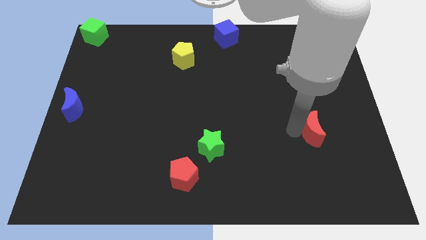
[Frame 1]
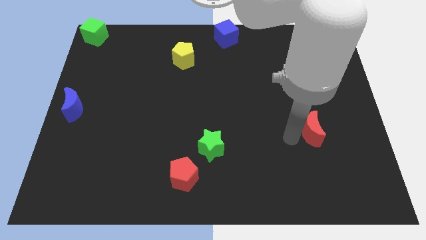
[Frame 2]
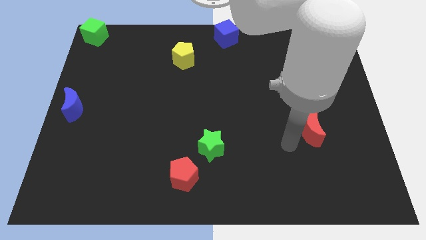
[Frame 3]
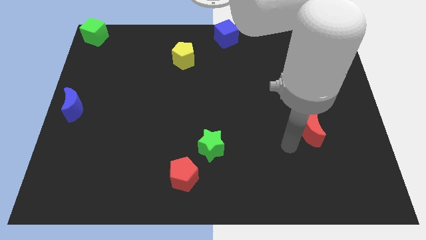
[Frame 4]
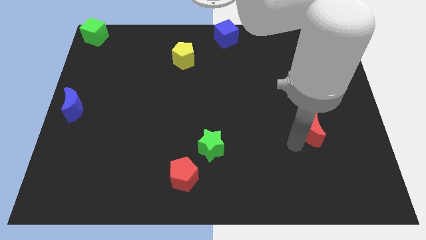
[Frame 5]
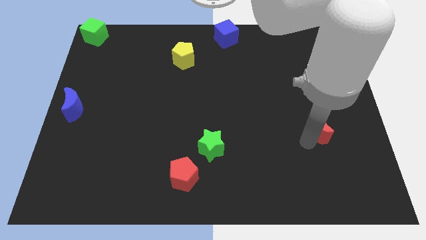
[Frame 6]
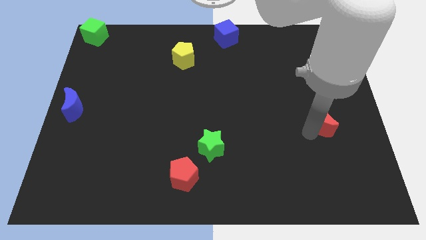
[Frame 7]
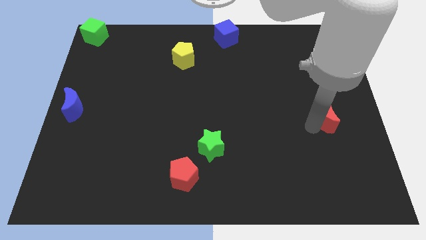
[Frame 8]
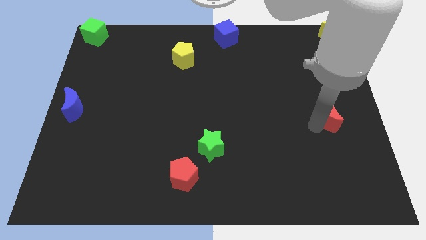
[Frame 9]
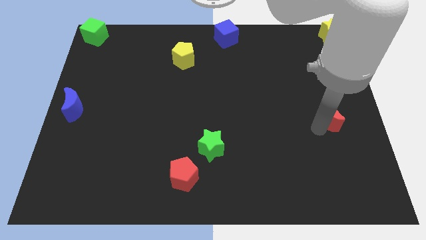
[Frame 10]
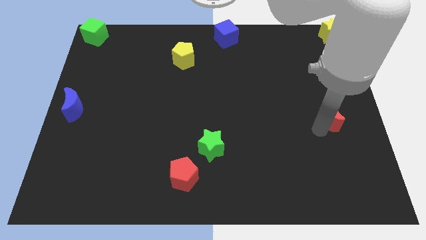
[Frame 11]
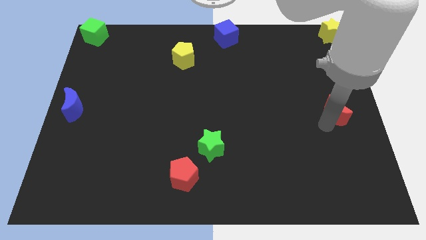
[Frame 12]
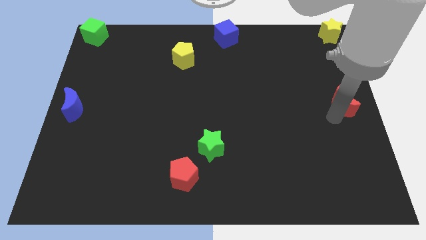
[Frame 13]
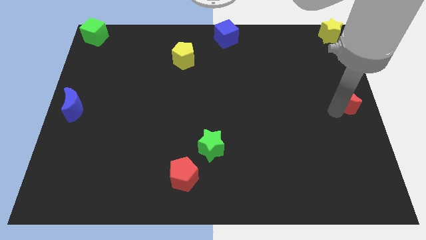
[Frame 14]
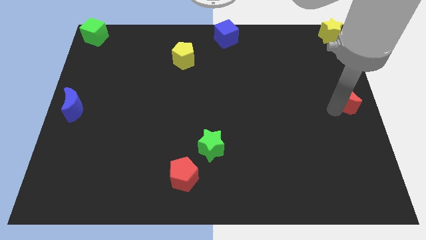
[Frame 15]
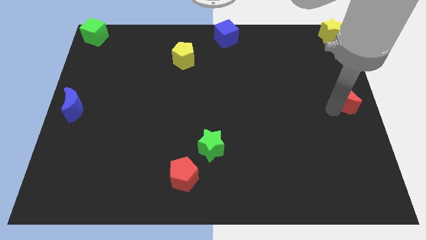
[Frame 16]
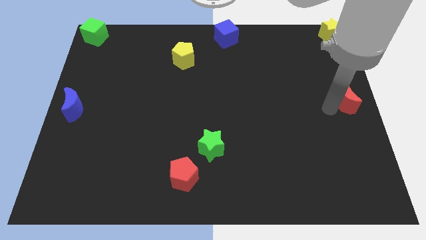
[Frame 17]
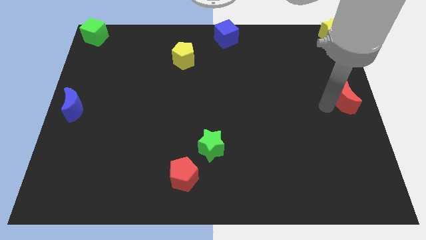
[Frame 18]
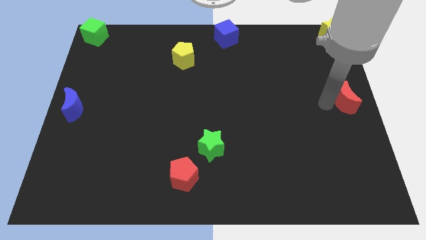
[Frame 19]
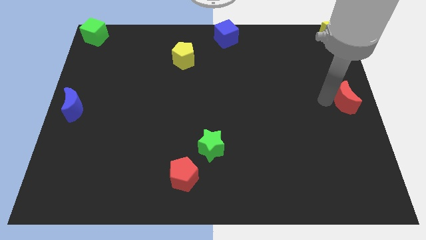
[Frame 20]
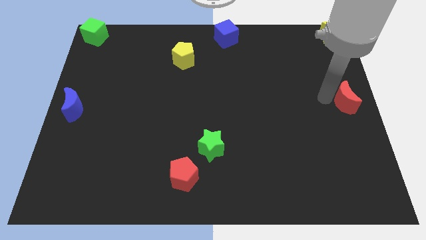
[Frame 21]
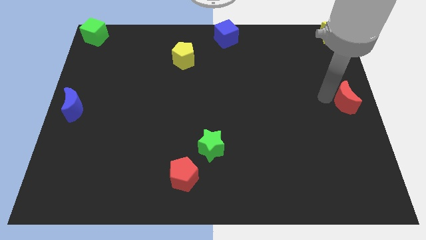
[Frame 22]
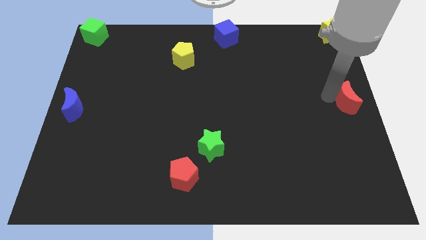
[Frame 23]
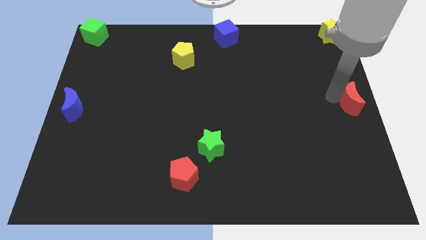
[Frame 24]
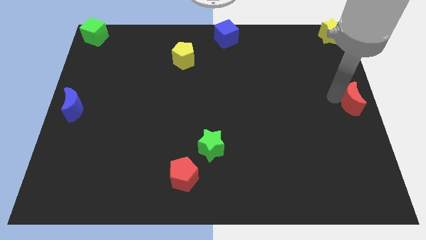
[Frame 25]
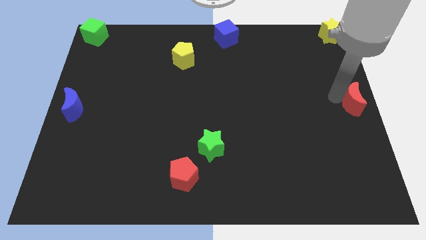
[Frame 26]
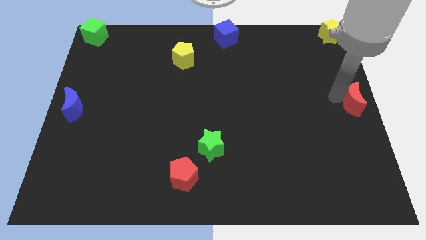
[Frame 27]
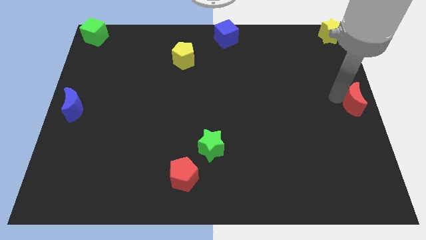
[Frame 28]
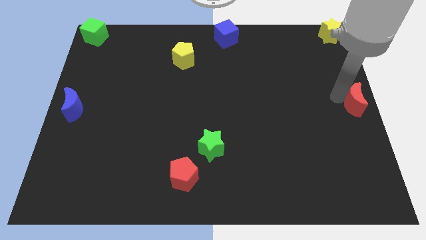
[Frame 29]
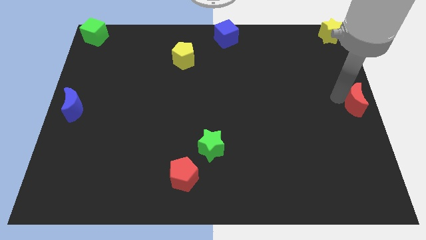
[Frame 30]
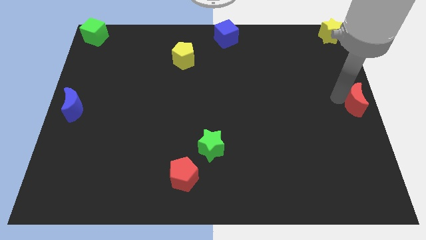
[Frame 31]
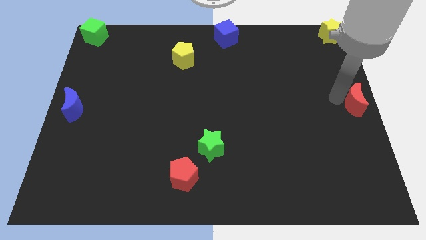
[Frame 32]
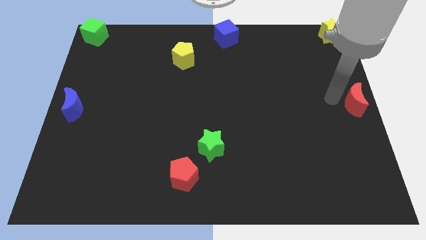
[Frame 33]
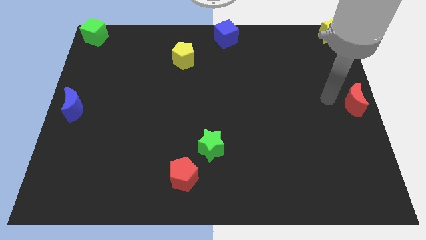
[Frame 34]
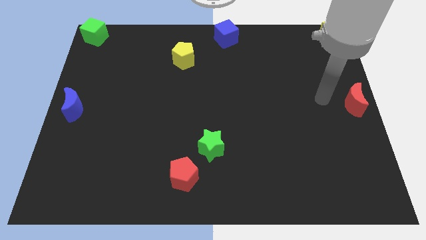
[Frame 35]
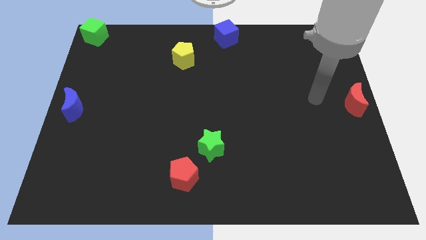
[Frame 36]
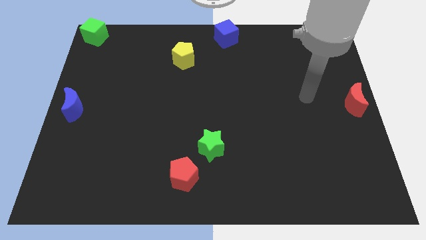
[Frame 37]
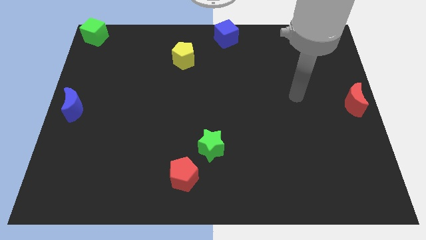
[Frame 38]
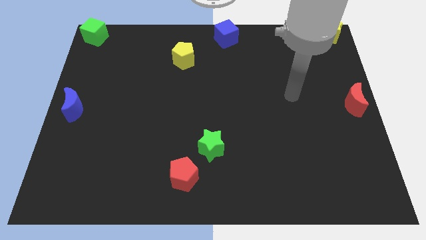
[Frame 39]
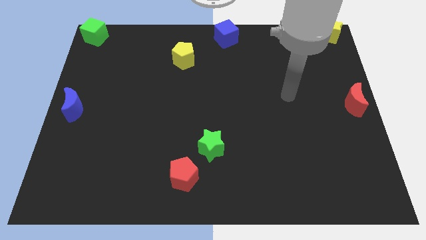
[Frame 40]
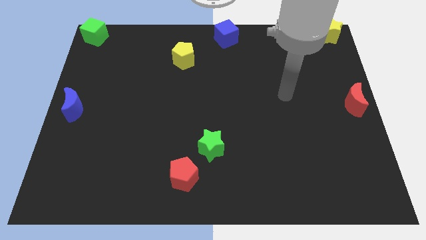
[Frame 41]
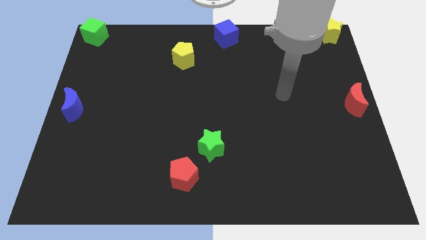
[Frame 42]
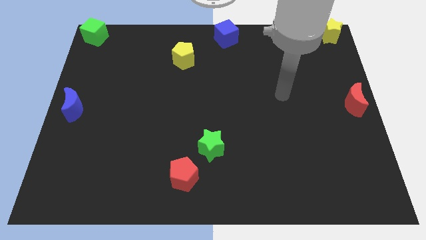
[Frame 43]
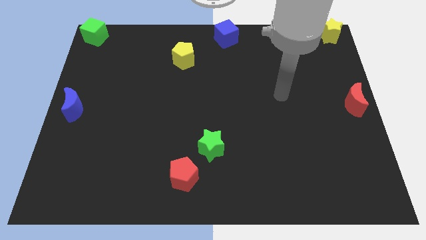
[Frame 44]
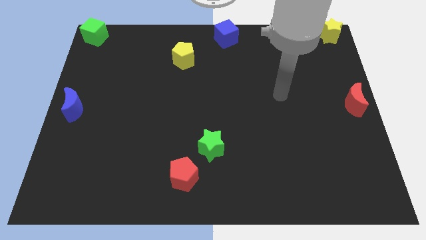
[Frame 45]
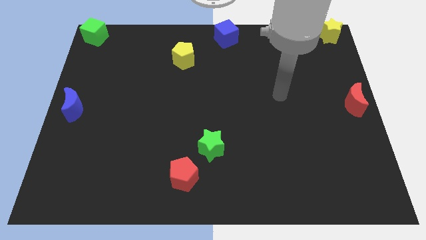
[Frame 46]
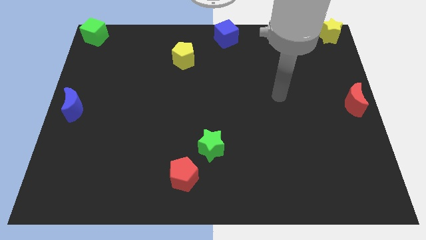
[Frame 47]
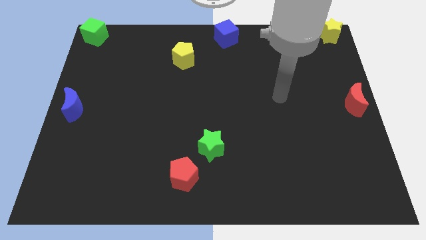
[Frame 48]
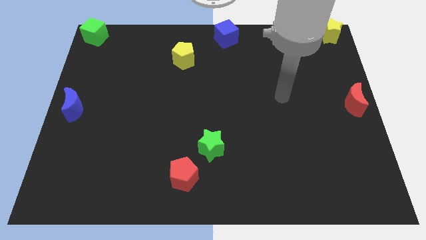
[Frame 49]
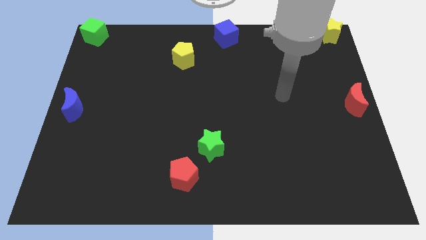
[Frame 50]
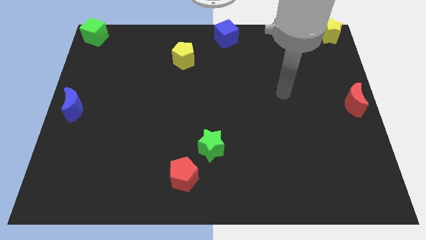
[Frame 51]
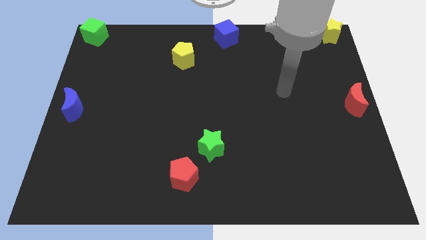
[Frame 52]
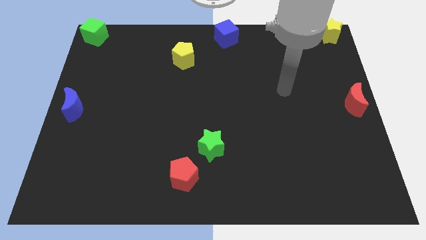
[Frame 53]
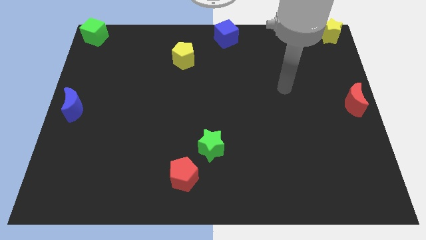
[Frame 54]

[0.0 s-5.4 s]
push the red crescent towards the center right of the board

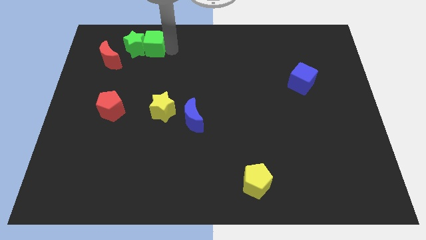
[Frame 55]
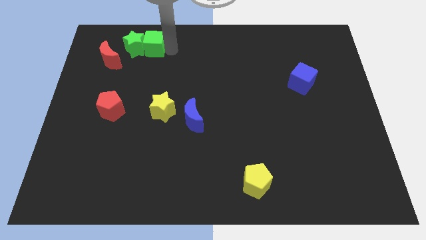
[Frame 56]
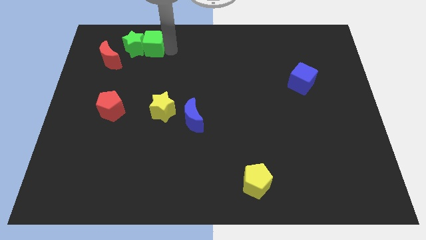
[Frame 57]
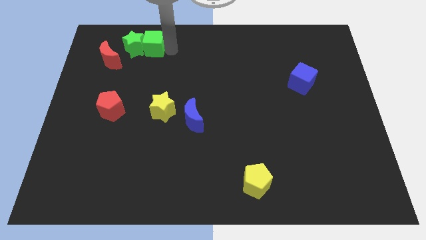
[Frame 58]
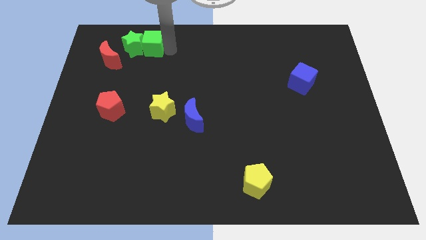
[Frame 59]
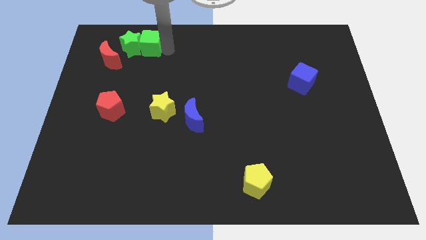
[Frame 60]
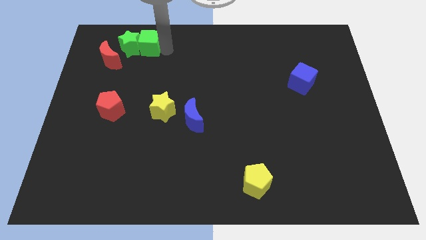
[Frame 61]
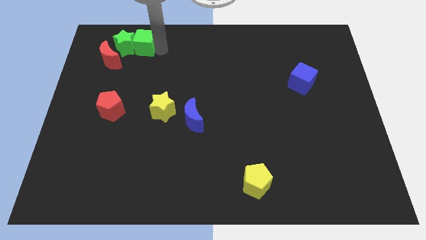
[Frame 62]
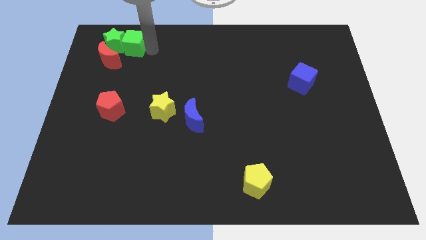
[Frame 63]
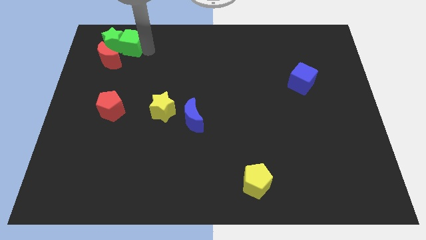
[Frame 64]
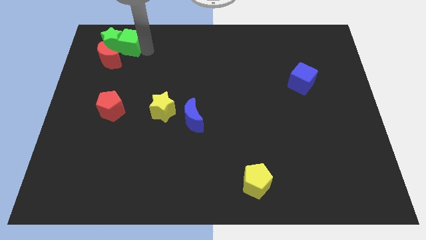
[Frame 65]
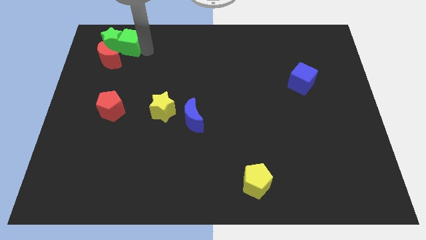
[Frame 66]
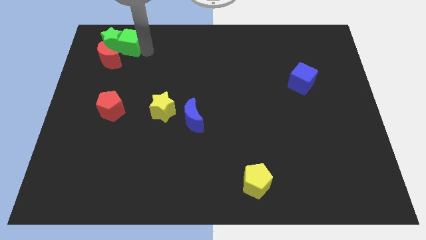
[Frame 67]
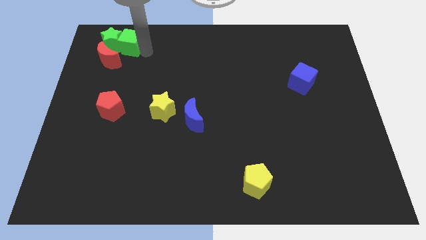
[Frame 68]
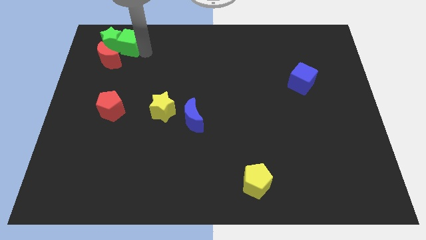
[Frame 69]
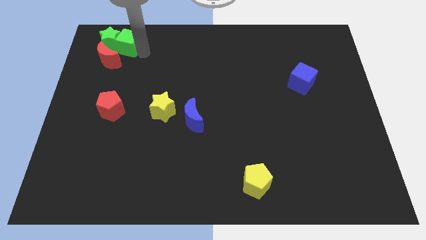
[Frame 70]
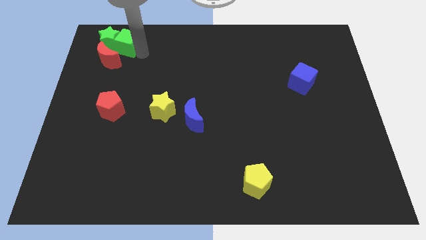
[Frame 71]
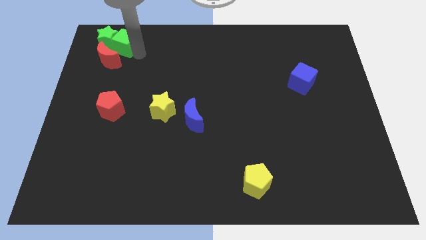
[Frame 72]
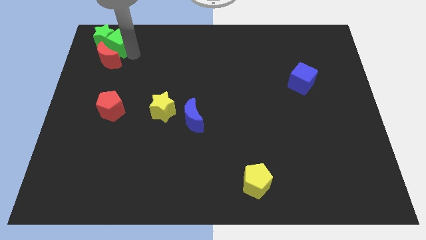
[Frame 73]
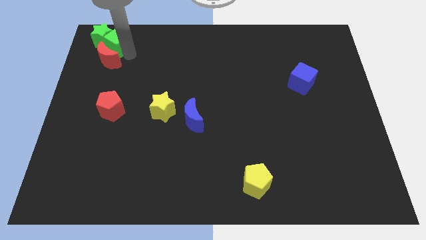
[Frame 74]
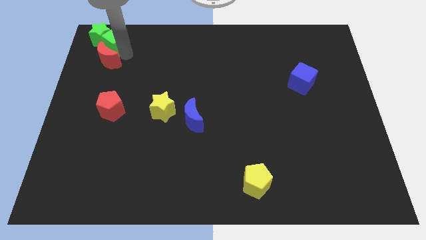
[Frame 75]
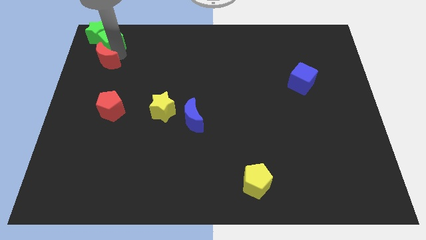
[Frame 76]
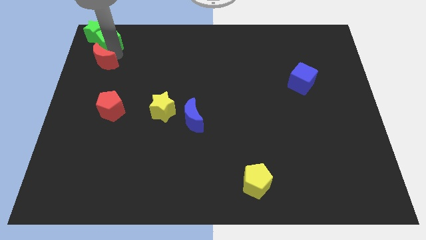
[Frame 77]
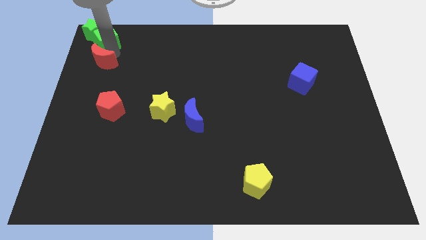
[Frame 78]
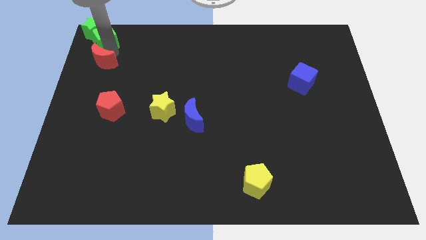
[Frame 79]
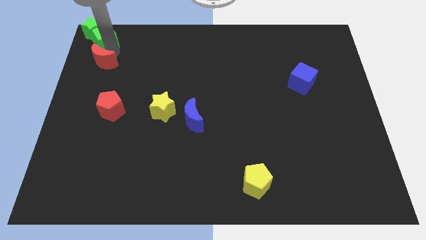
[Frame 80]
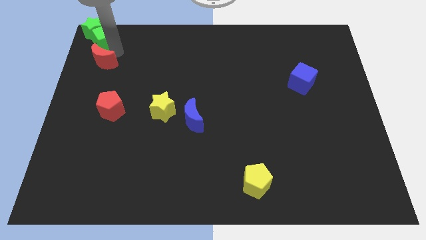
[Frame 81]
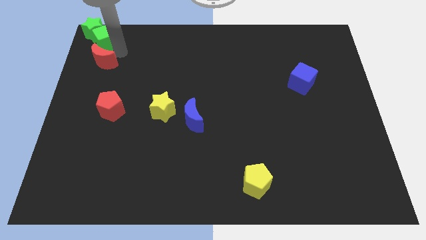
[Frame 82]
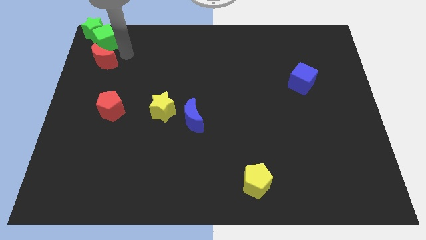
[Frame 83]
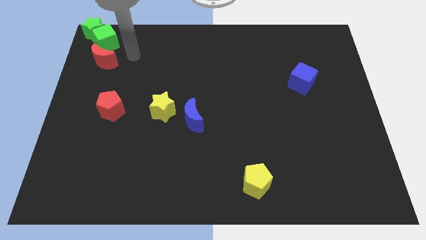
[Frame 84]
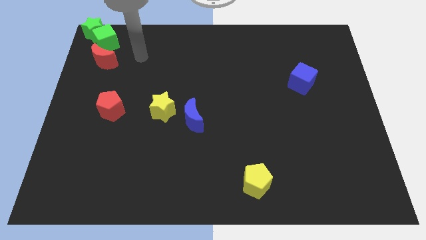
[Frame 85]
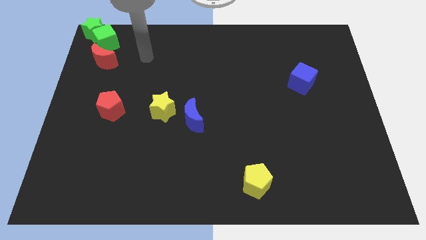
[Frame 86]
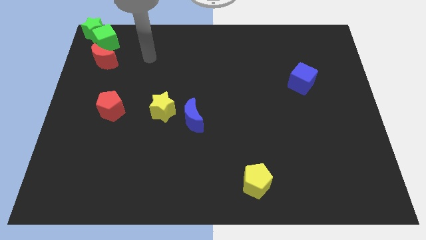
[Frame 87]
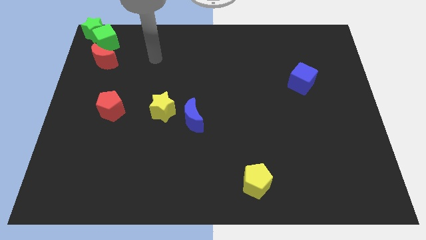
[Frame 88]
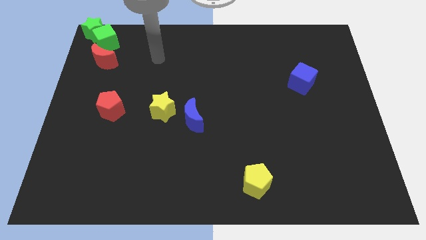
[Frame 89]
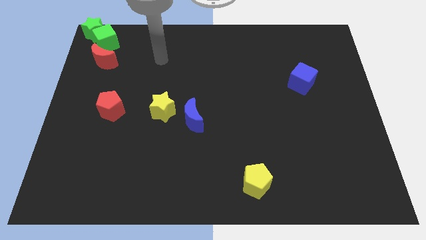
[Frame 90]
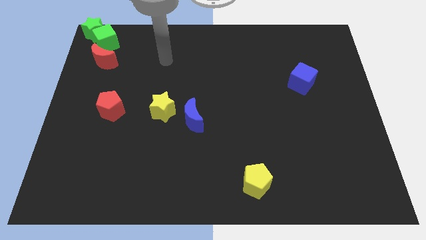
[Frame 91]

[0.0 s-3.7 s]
push the green star with the cube to the top left
